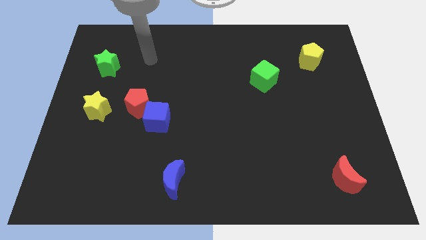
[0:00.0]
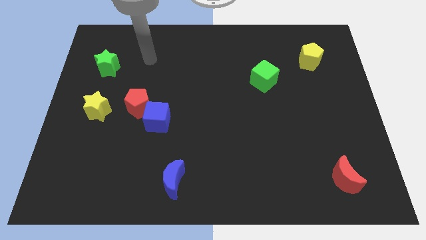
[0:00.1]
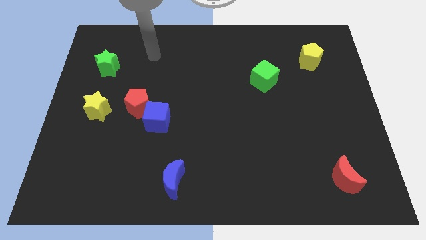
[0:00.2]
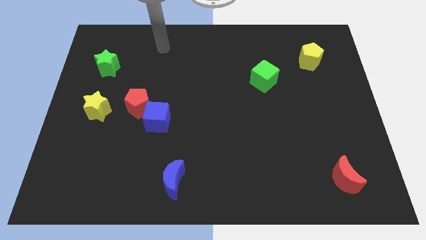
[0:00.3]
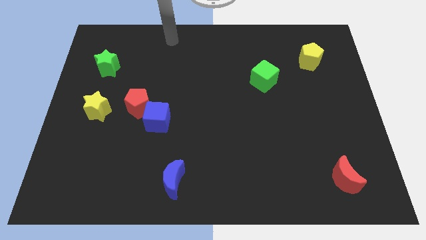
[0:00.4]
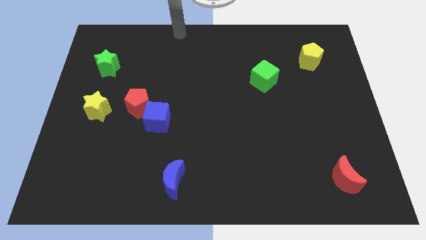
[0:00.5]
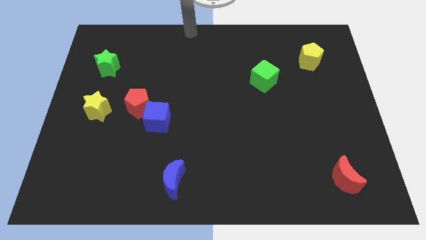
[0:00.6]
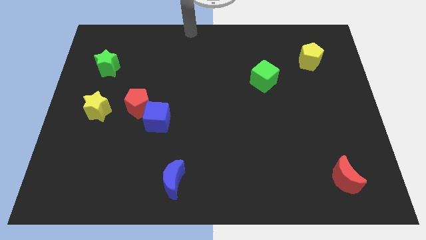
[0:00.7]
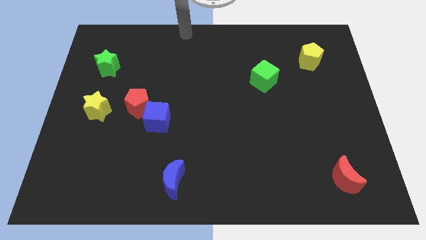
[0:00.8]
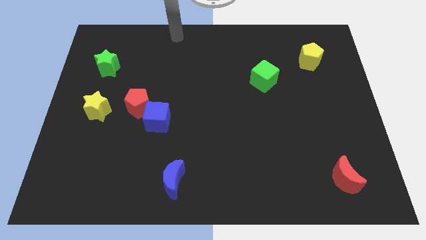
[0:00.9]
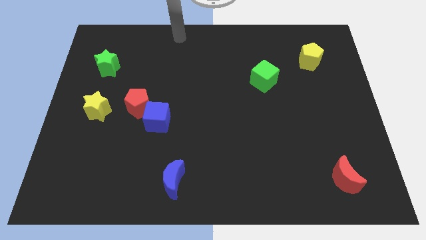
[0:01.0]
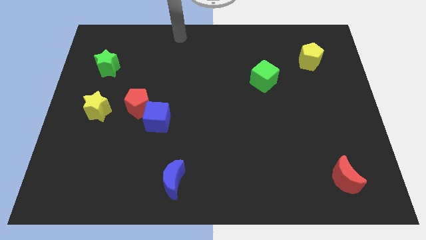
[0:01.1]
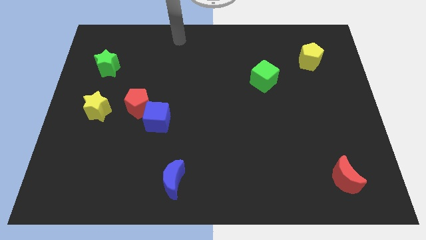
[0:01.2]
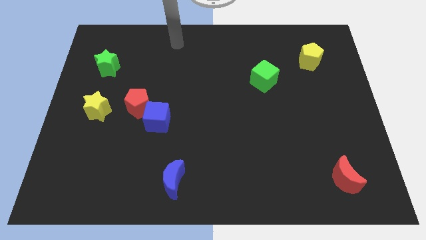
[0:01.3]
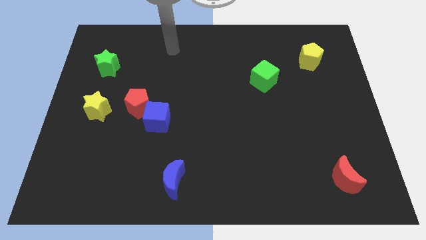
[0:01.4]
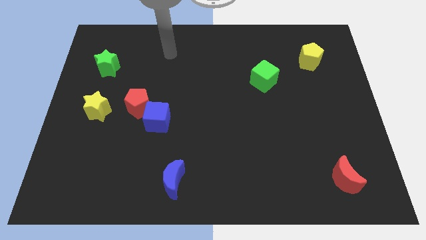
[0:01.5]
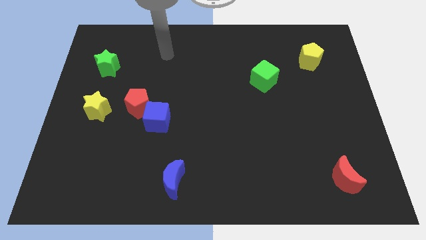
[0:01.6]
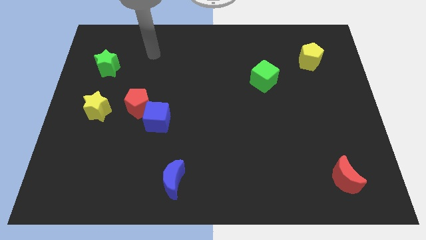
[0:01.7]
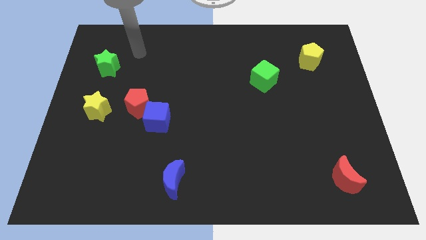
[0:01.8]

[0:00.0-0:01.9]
point the hand at the right side of the green star

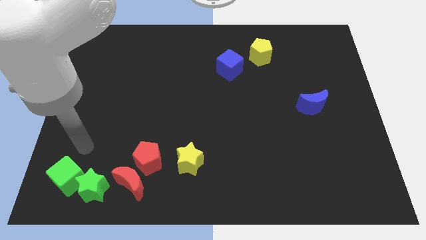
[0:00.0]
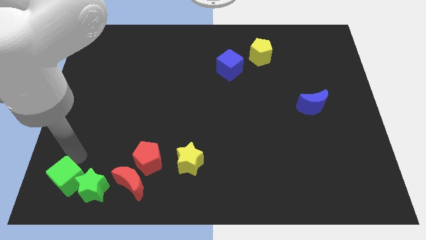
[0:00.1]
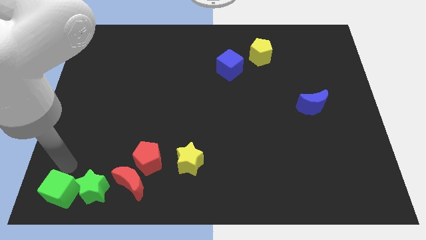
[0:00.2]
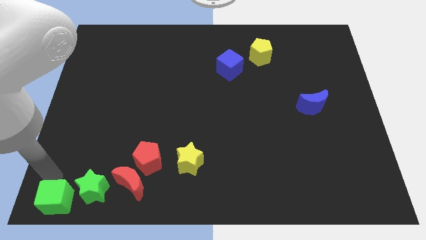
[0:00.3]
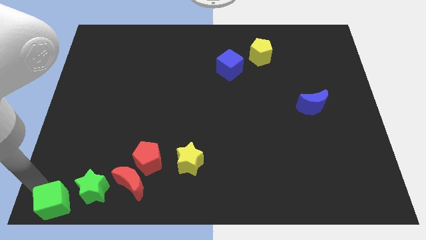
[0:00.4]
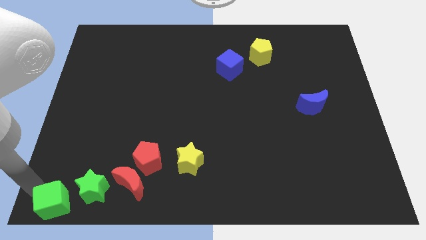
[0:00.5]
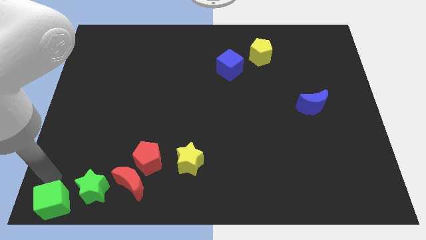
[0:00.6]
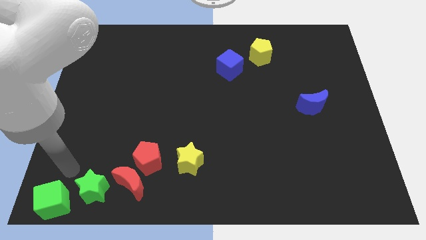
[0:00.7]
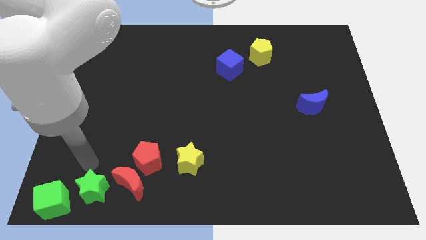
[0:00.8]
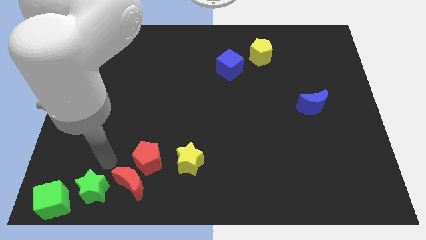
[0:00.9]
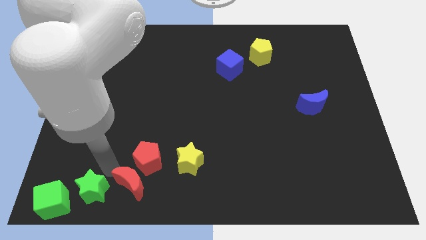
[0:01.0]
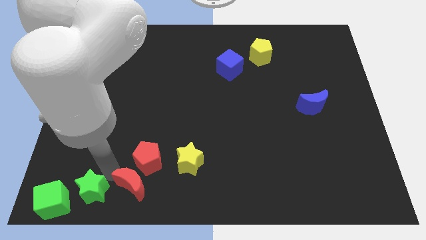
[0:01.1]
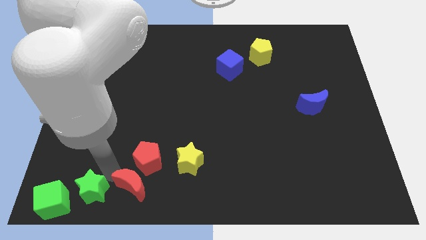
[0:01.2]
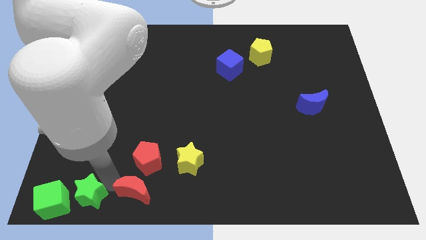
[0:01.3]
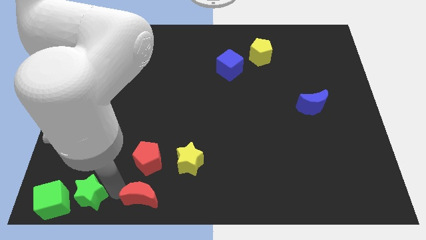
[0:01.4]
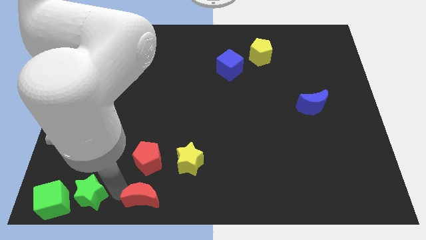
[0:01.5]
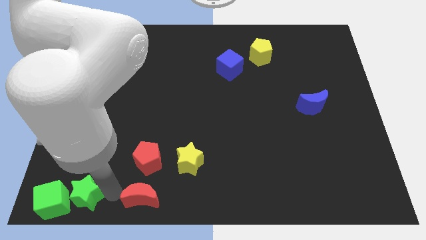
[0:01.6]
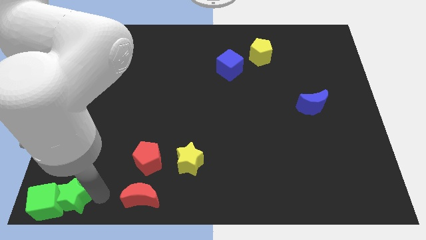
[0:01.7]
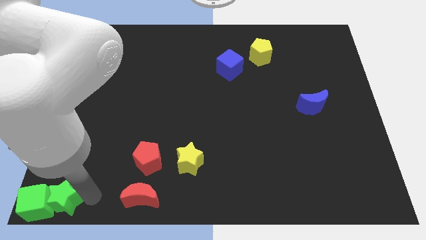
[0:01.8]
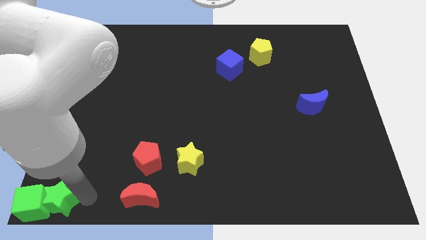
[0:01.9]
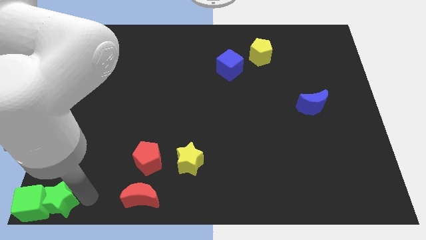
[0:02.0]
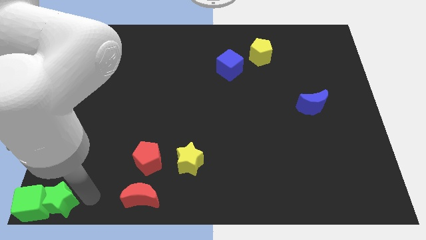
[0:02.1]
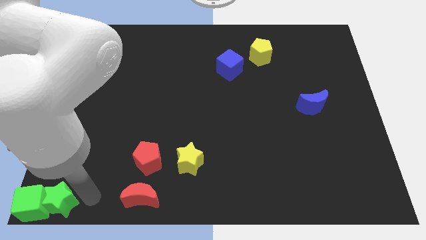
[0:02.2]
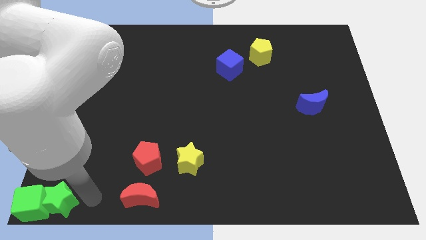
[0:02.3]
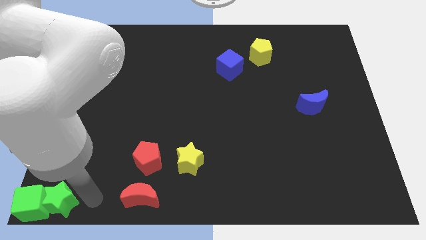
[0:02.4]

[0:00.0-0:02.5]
place the green blocks to the bottom left corner

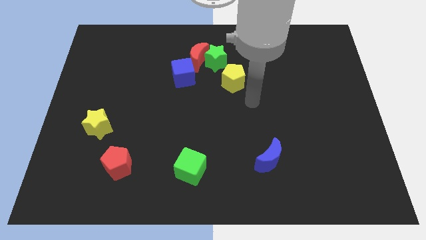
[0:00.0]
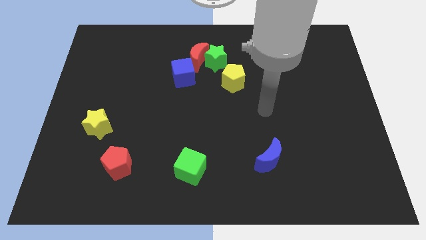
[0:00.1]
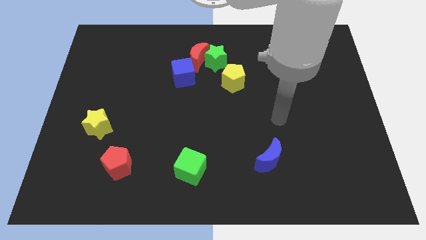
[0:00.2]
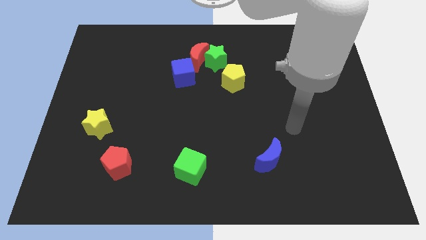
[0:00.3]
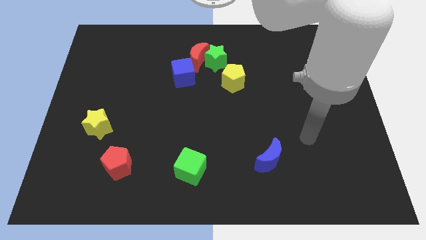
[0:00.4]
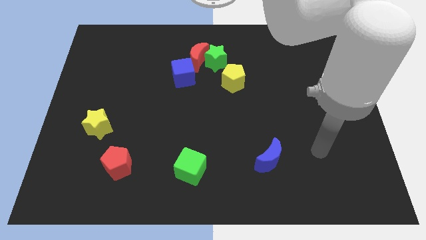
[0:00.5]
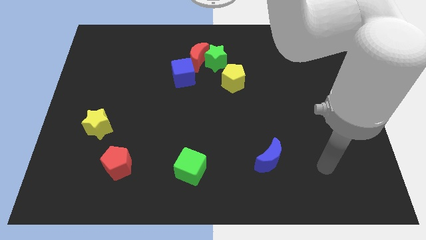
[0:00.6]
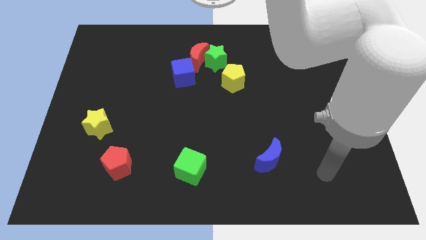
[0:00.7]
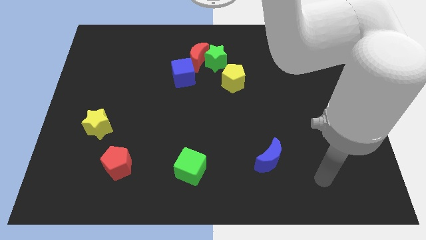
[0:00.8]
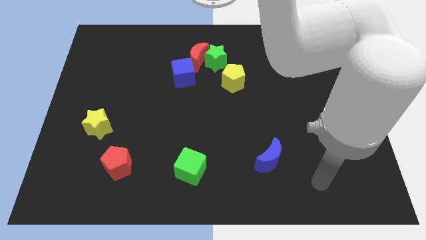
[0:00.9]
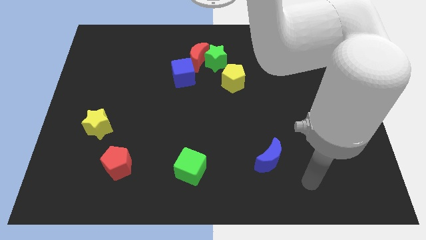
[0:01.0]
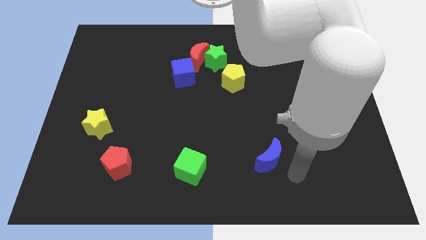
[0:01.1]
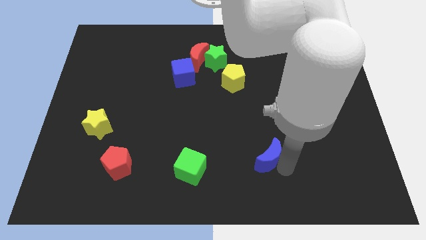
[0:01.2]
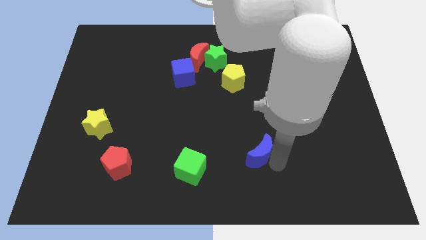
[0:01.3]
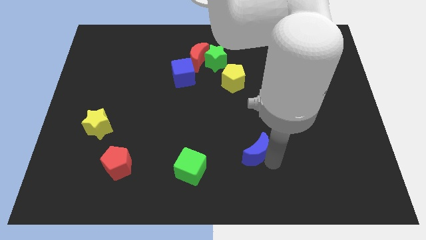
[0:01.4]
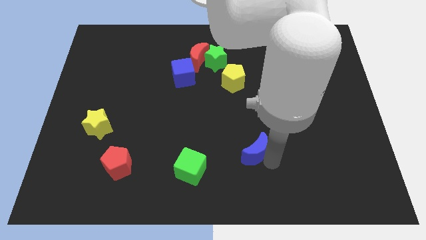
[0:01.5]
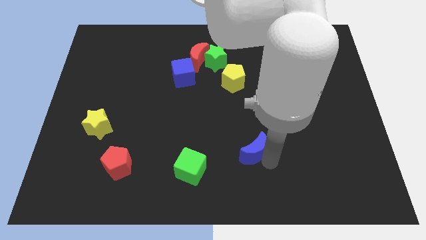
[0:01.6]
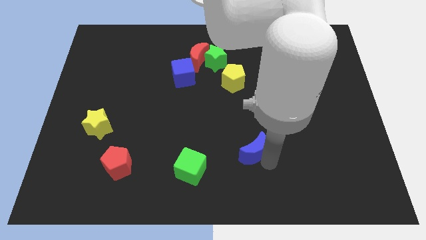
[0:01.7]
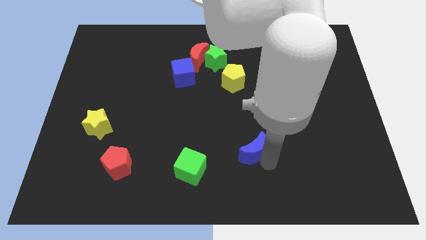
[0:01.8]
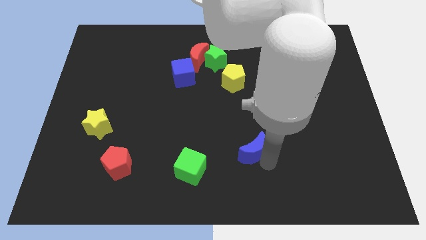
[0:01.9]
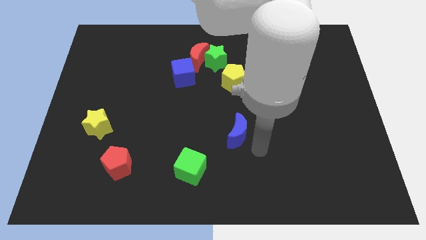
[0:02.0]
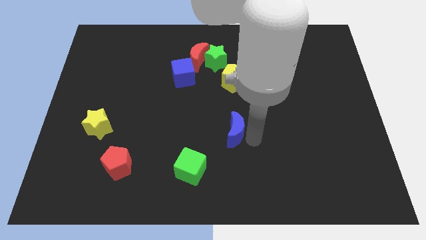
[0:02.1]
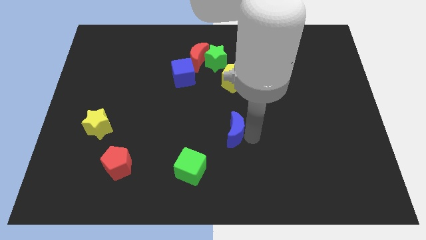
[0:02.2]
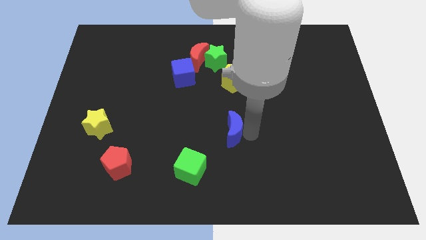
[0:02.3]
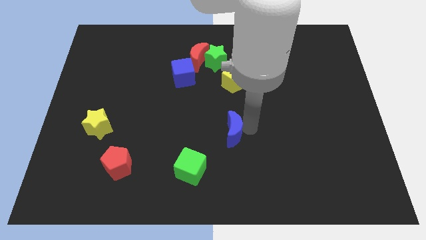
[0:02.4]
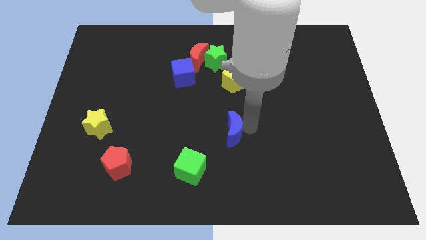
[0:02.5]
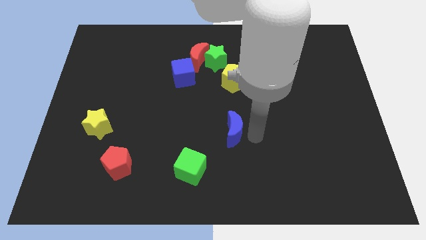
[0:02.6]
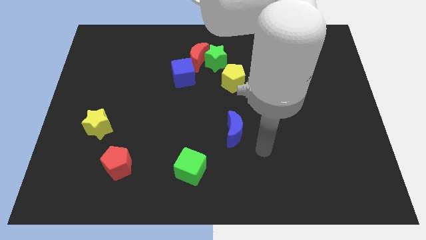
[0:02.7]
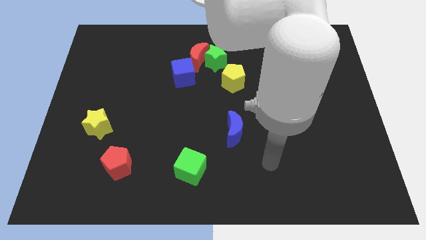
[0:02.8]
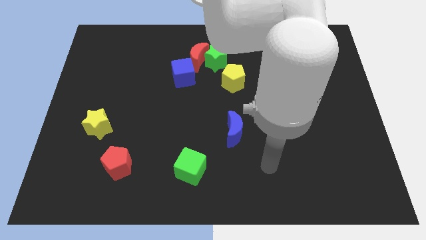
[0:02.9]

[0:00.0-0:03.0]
place the blue crescent diagonally towards green cube

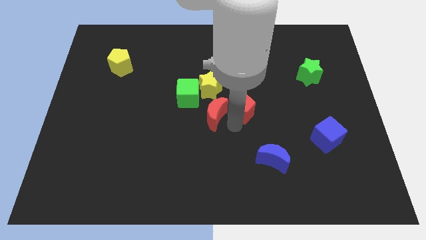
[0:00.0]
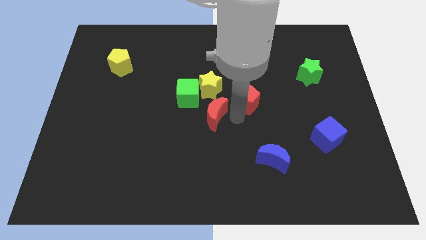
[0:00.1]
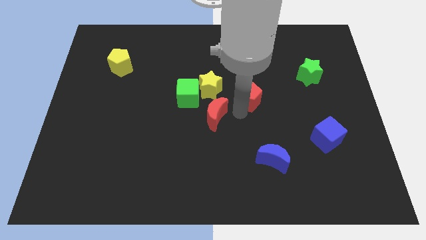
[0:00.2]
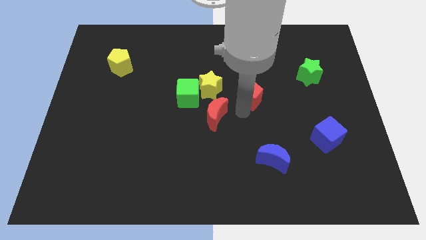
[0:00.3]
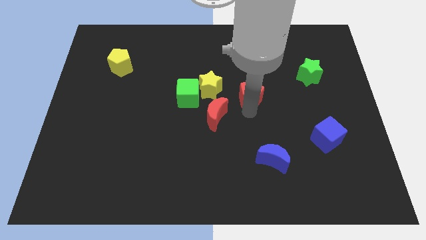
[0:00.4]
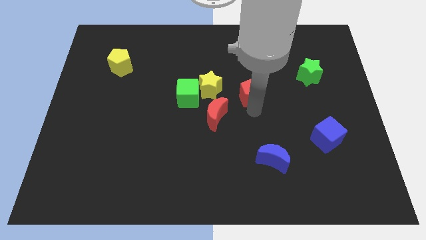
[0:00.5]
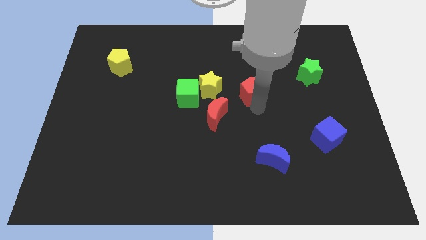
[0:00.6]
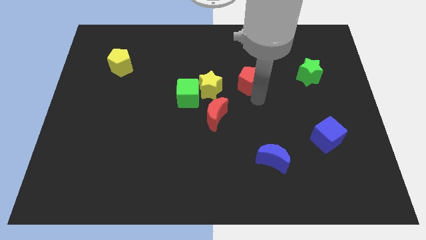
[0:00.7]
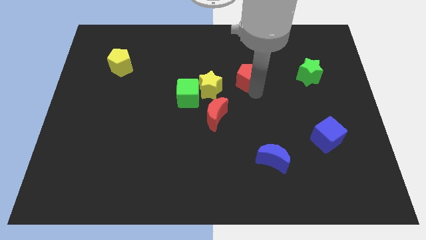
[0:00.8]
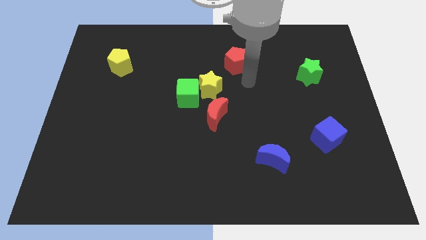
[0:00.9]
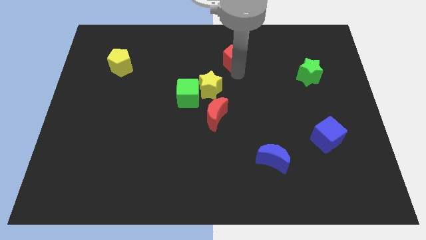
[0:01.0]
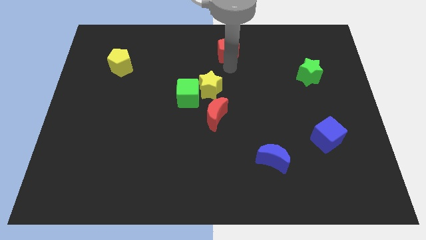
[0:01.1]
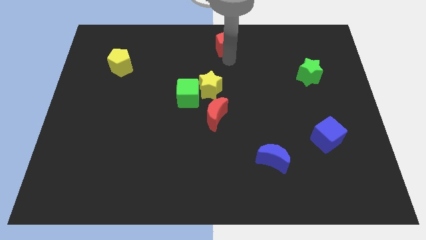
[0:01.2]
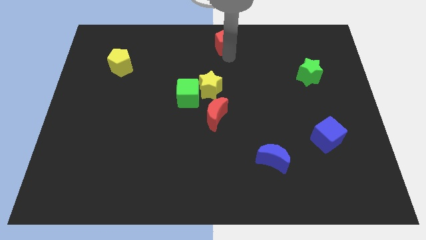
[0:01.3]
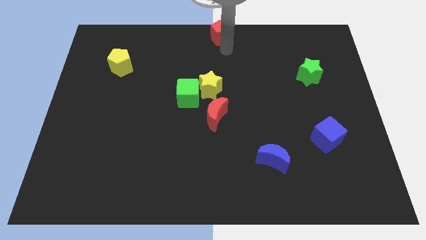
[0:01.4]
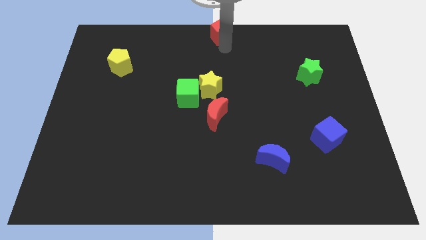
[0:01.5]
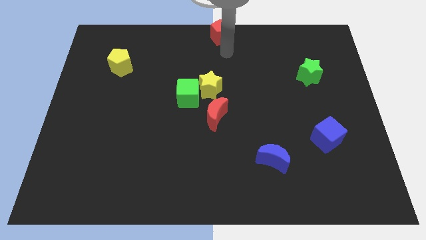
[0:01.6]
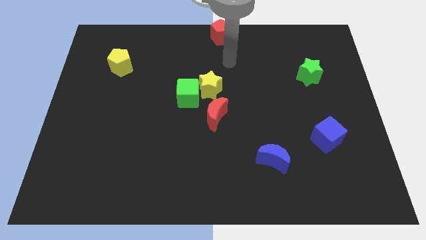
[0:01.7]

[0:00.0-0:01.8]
place the red pentagon on top above yellow star
